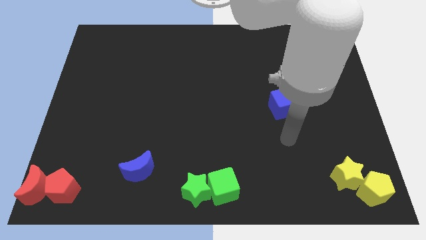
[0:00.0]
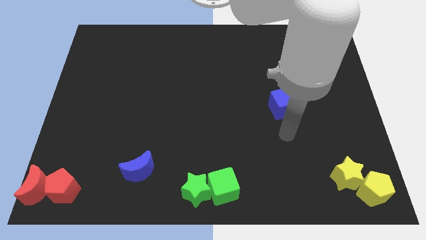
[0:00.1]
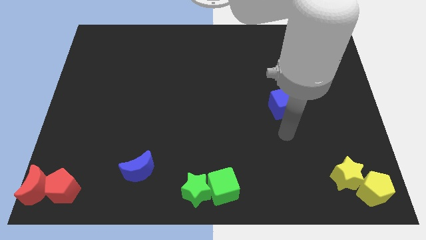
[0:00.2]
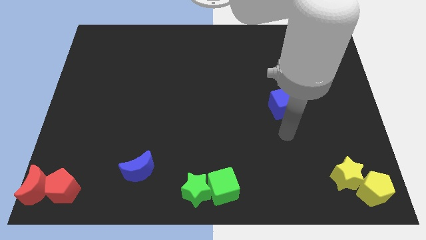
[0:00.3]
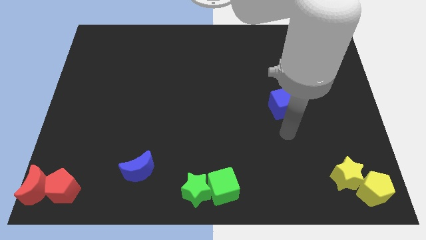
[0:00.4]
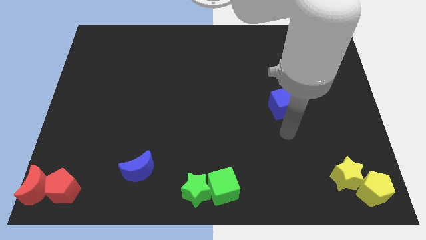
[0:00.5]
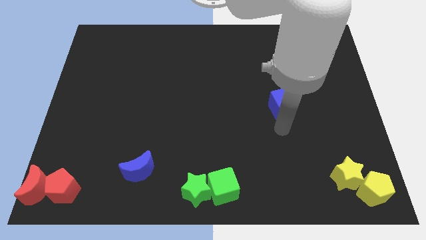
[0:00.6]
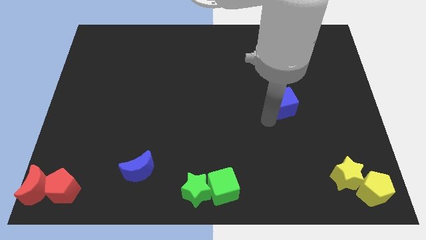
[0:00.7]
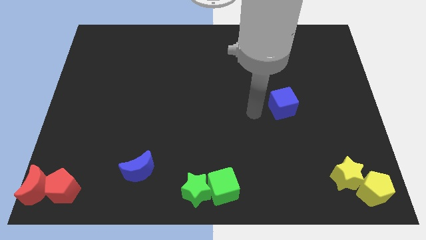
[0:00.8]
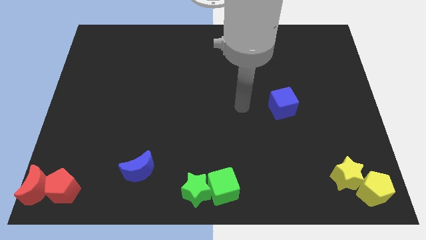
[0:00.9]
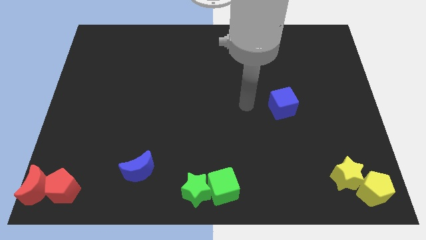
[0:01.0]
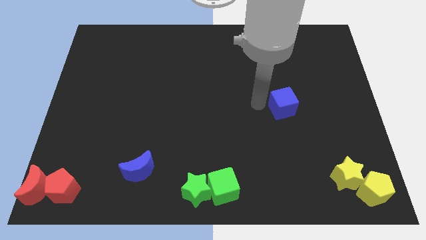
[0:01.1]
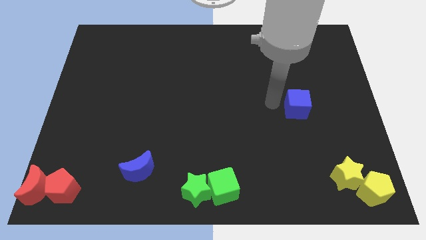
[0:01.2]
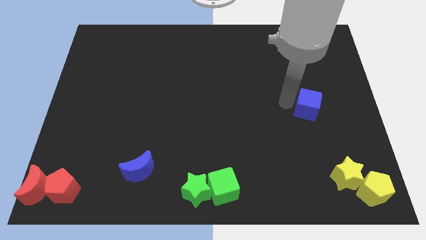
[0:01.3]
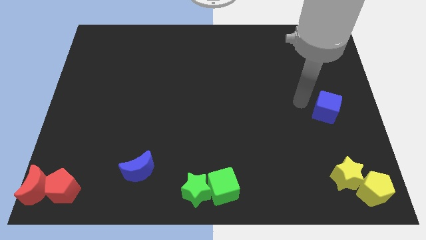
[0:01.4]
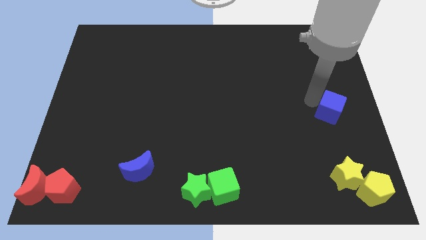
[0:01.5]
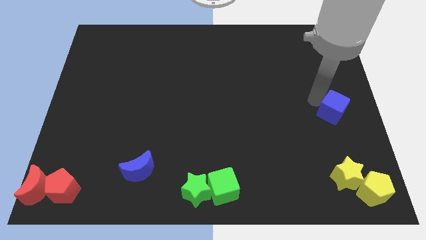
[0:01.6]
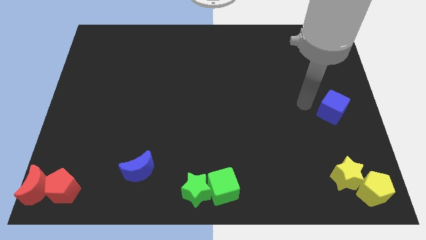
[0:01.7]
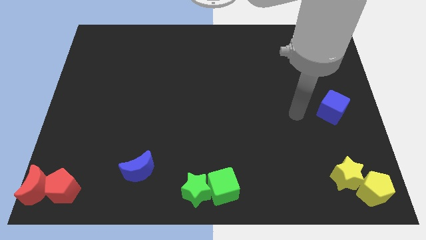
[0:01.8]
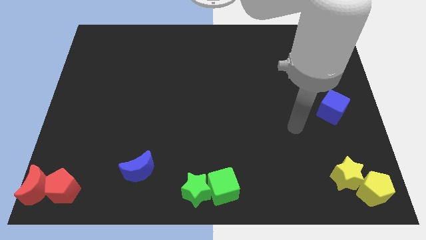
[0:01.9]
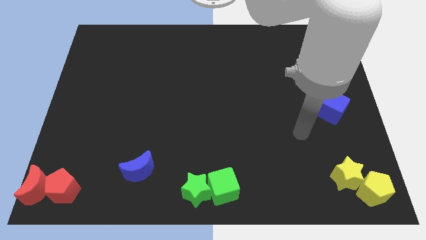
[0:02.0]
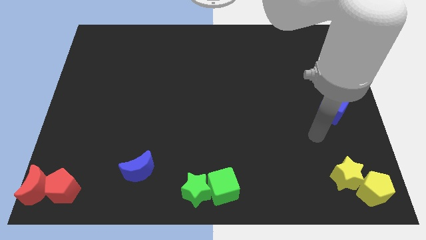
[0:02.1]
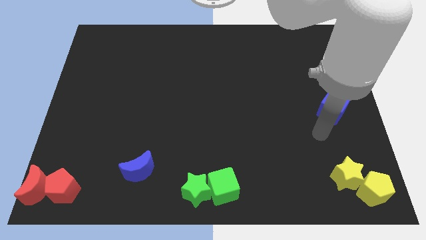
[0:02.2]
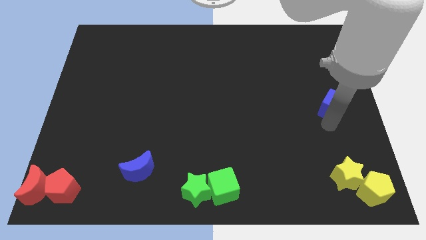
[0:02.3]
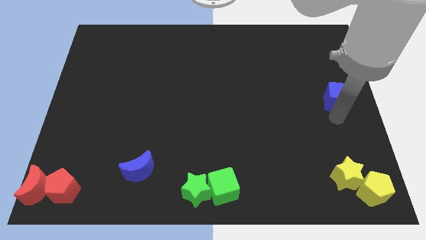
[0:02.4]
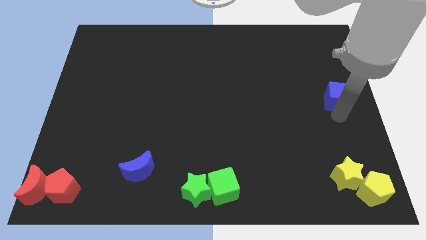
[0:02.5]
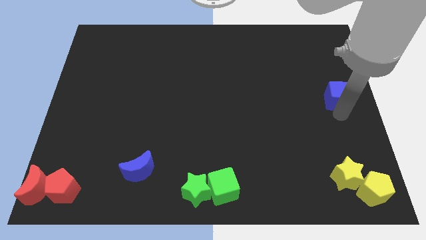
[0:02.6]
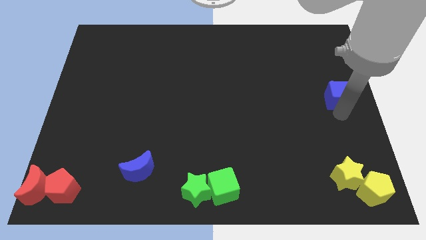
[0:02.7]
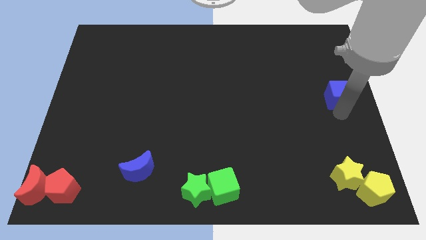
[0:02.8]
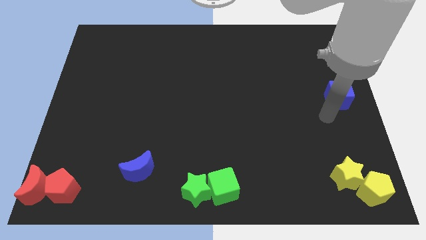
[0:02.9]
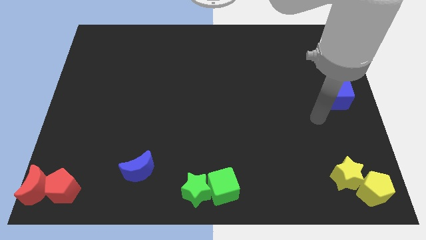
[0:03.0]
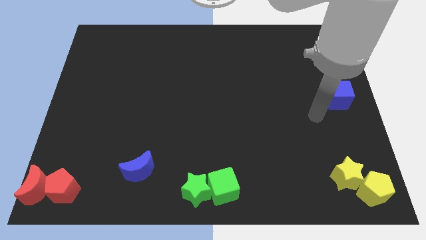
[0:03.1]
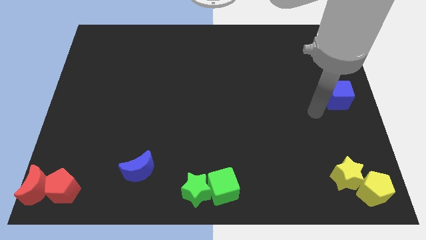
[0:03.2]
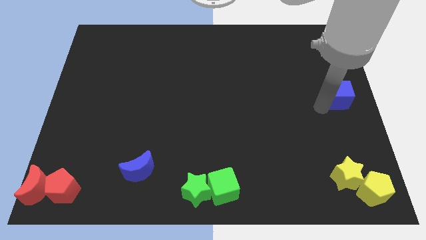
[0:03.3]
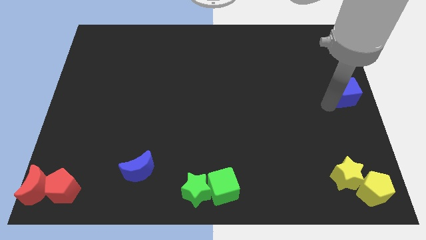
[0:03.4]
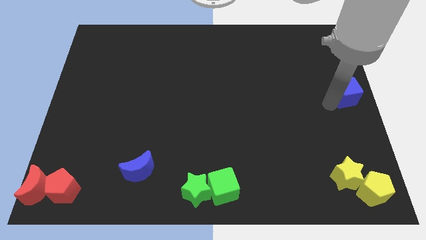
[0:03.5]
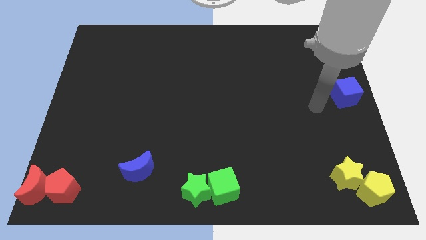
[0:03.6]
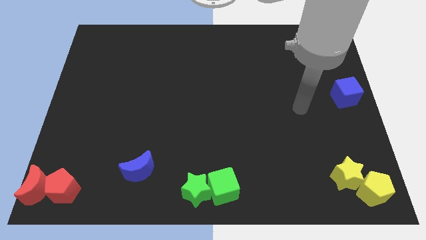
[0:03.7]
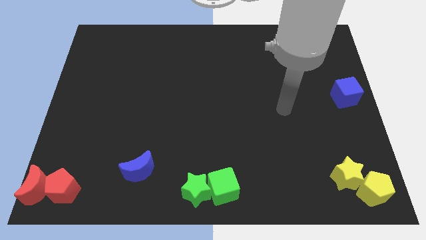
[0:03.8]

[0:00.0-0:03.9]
place the blue cube to center right

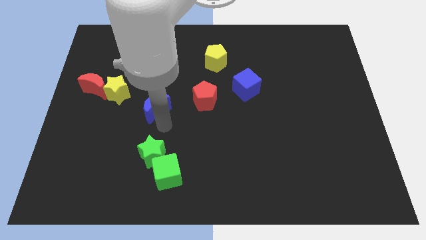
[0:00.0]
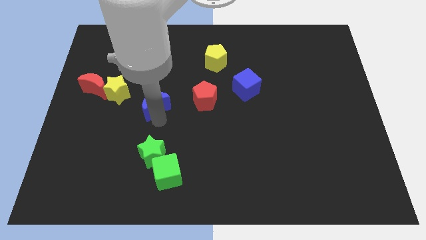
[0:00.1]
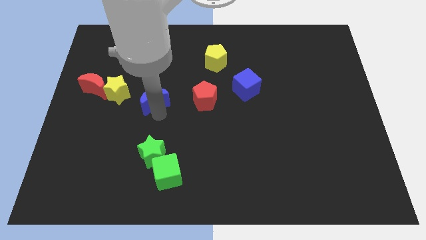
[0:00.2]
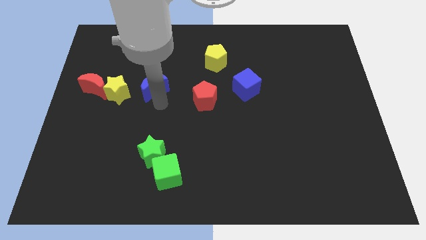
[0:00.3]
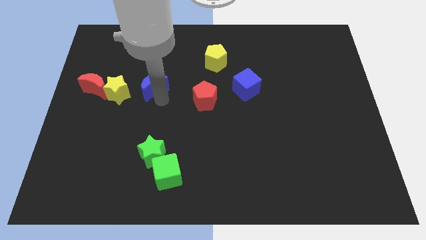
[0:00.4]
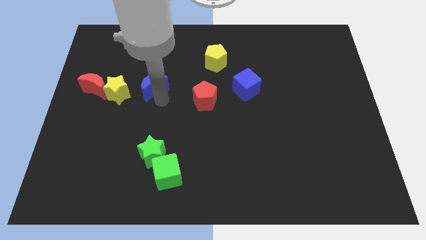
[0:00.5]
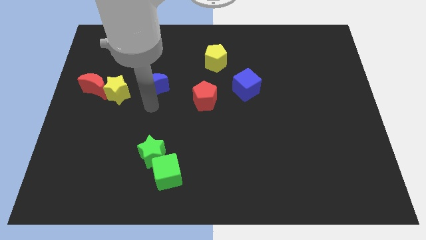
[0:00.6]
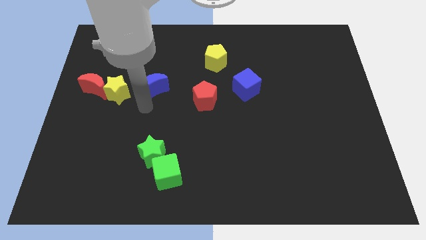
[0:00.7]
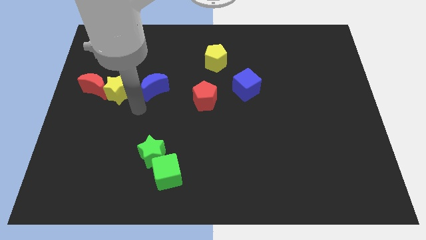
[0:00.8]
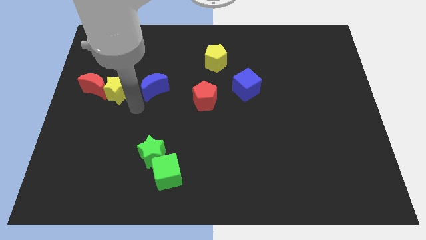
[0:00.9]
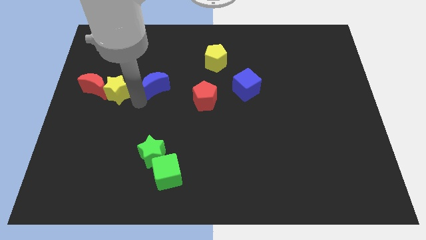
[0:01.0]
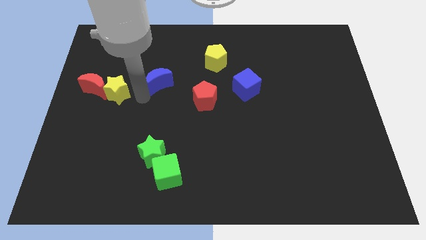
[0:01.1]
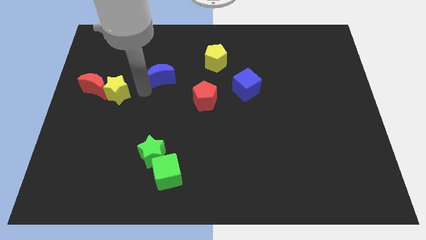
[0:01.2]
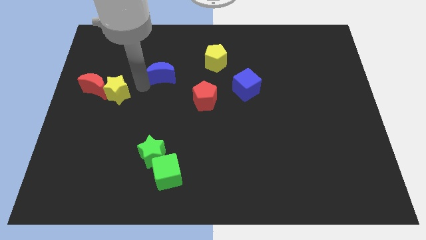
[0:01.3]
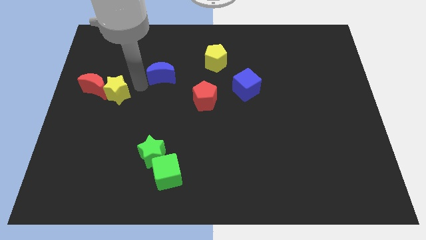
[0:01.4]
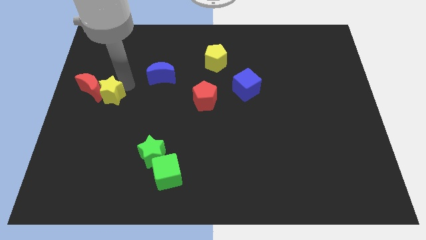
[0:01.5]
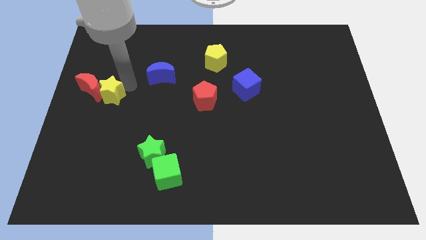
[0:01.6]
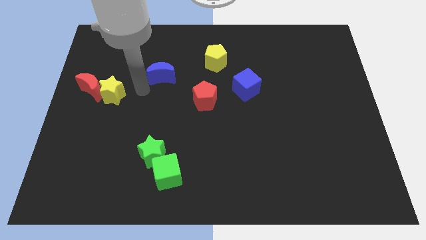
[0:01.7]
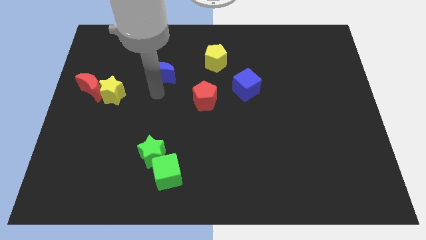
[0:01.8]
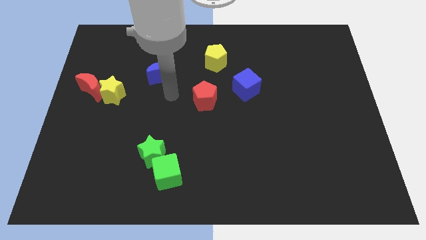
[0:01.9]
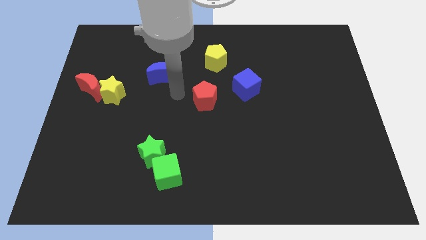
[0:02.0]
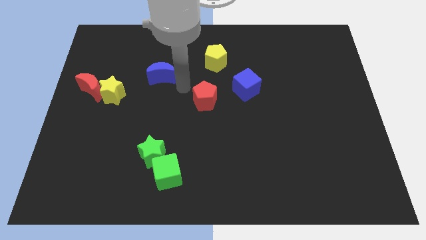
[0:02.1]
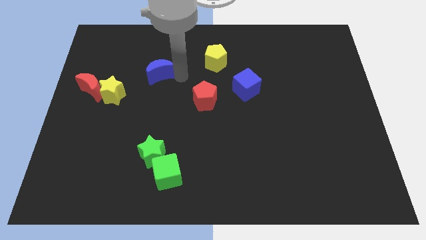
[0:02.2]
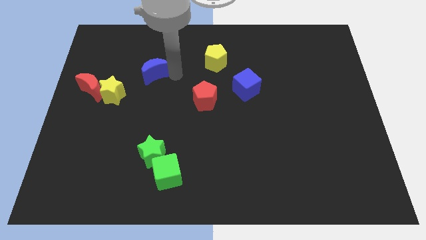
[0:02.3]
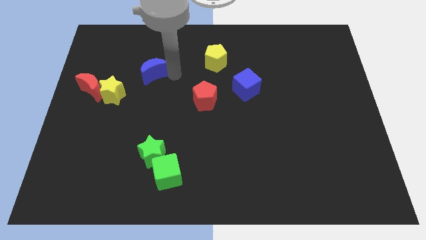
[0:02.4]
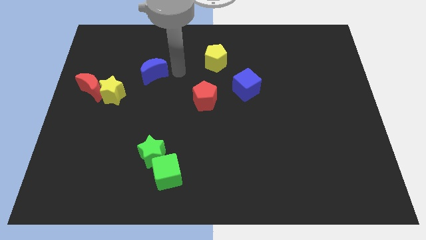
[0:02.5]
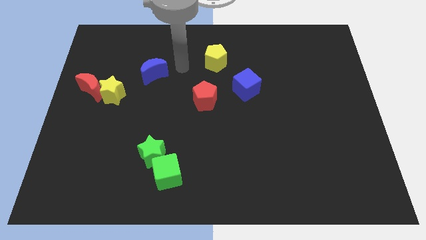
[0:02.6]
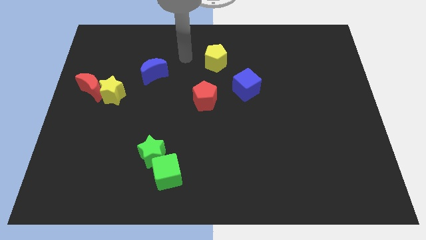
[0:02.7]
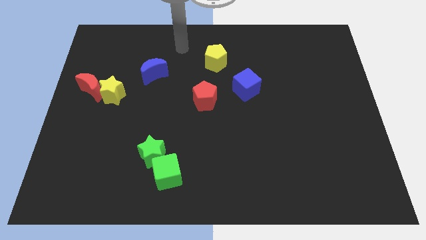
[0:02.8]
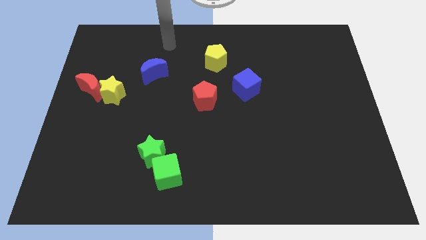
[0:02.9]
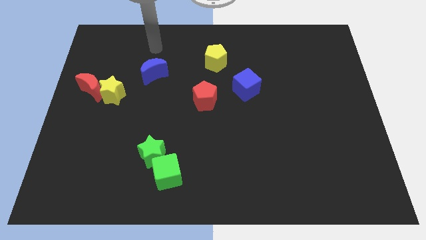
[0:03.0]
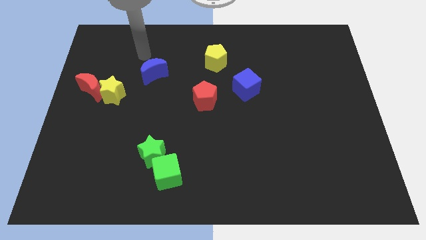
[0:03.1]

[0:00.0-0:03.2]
slide the blue moon diagonally top right to the yellow star

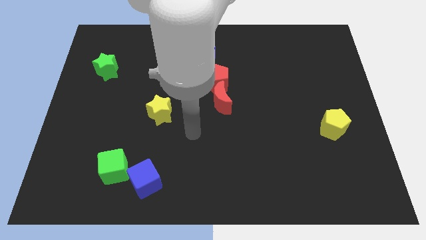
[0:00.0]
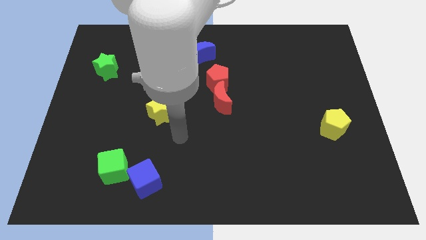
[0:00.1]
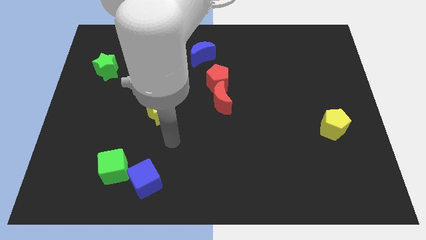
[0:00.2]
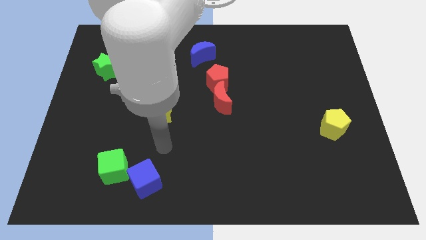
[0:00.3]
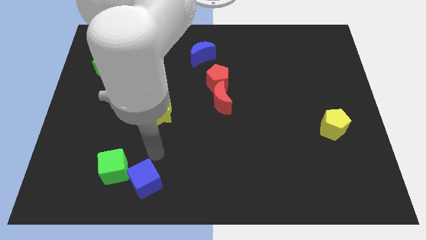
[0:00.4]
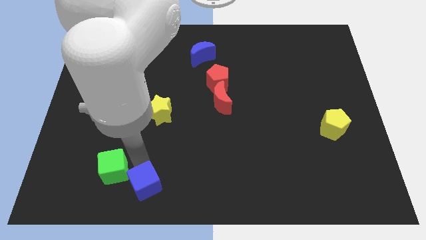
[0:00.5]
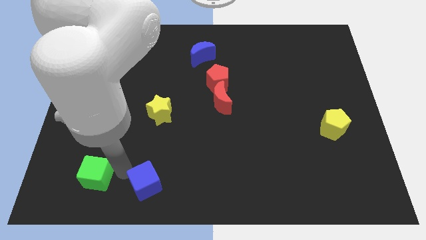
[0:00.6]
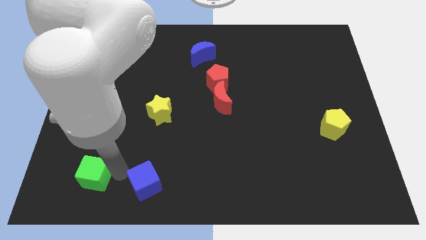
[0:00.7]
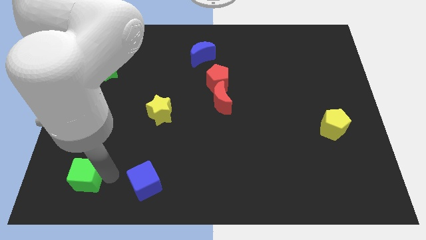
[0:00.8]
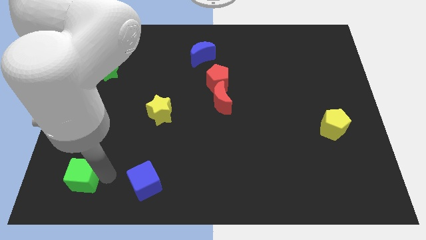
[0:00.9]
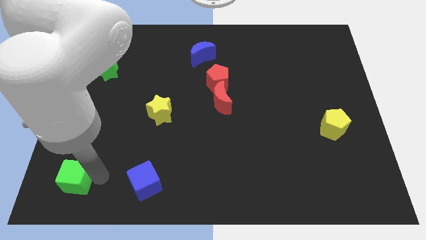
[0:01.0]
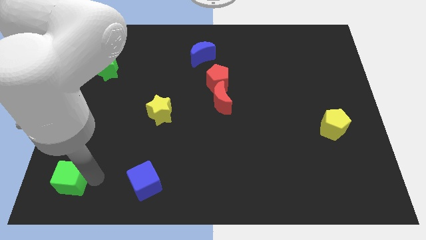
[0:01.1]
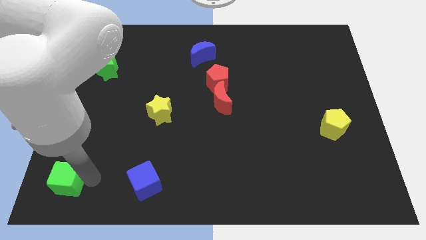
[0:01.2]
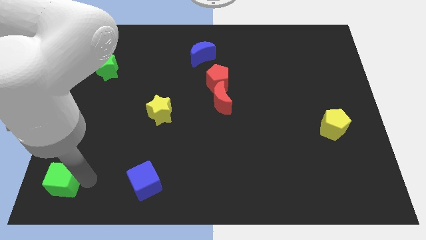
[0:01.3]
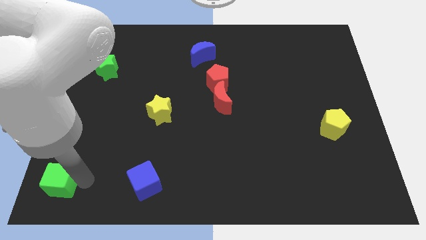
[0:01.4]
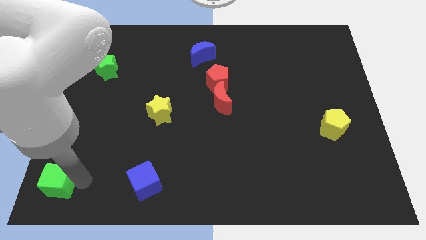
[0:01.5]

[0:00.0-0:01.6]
separate the green cube and blue cube

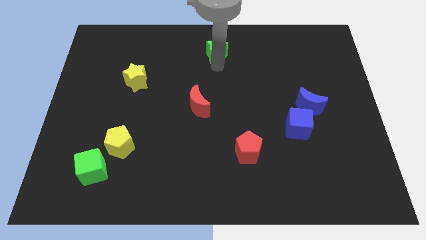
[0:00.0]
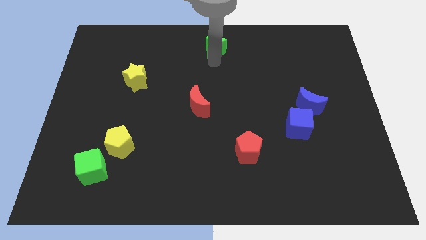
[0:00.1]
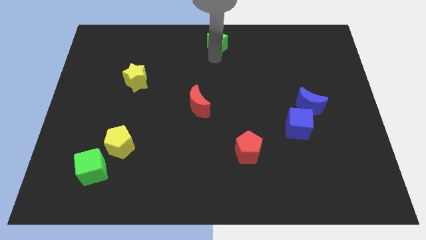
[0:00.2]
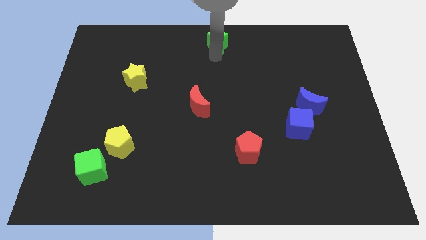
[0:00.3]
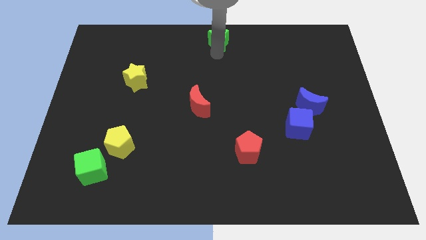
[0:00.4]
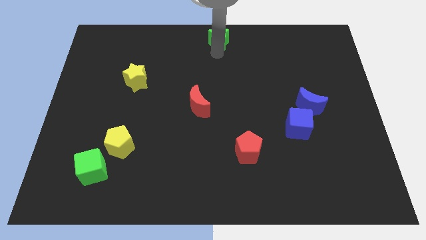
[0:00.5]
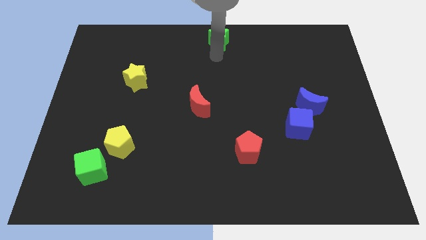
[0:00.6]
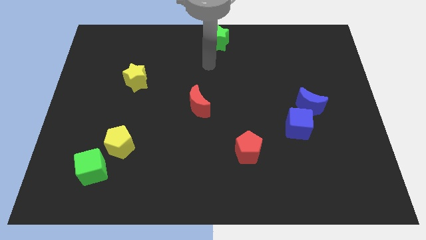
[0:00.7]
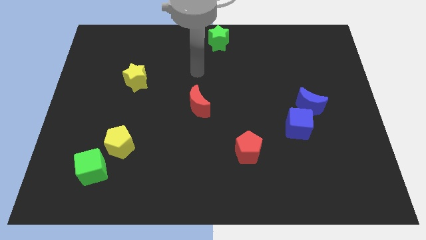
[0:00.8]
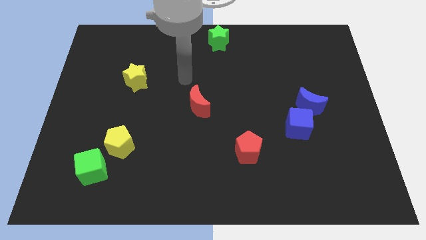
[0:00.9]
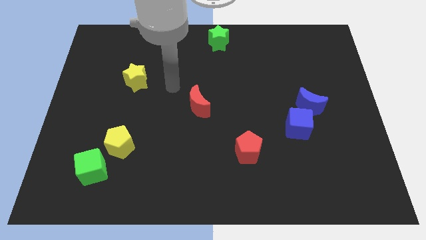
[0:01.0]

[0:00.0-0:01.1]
place the green star diagonally to yellow star
